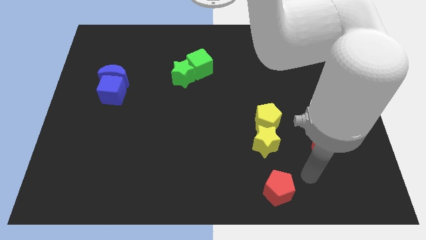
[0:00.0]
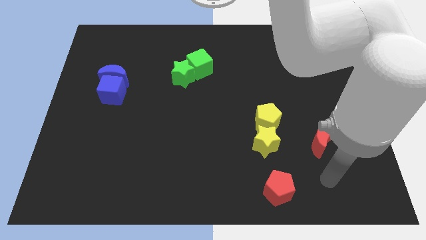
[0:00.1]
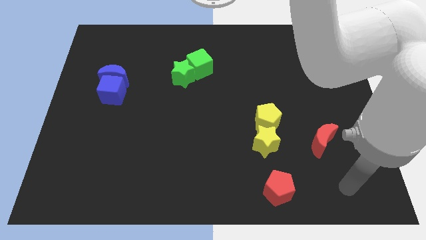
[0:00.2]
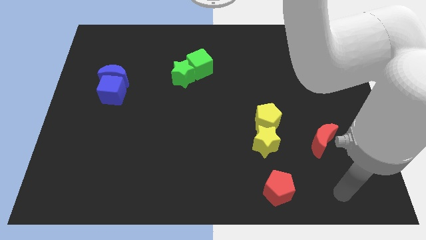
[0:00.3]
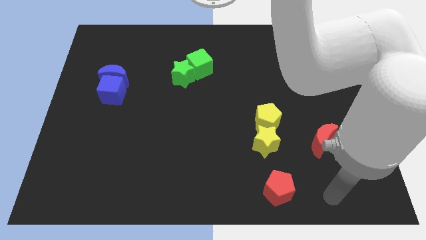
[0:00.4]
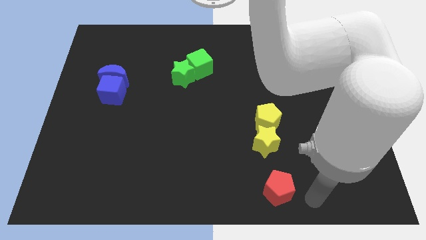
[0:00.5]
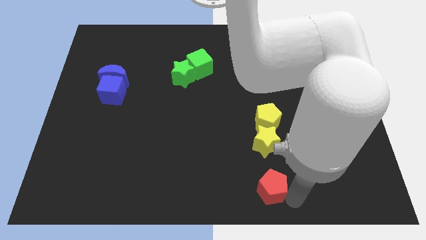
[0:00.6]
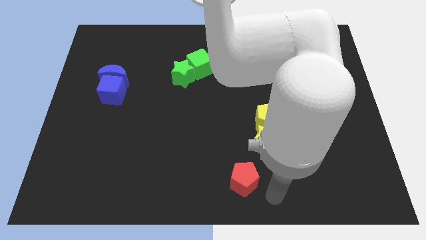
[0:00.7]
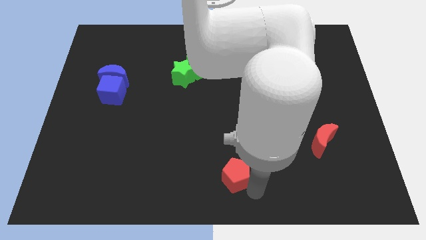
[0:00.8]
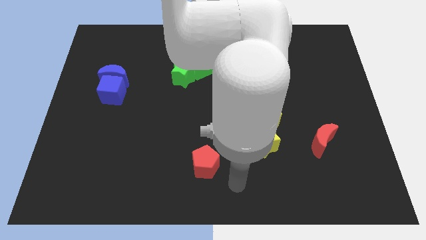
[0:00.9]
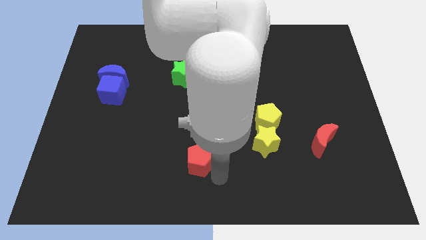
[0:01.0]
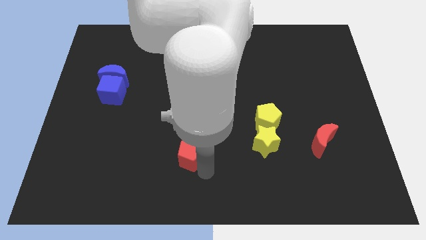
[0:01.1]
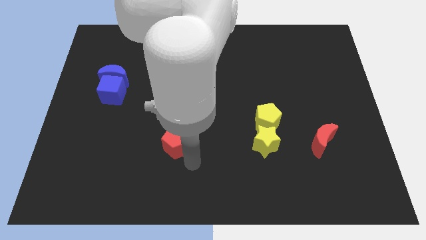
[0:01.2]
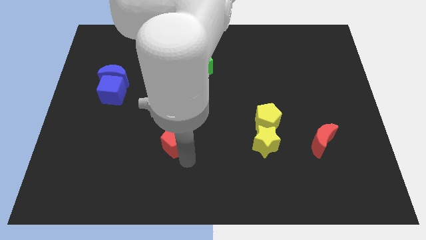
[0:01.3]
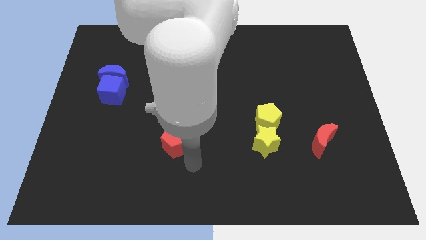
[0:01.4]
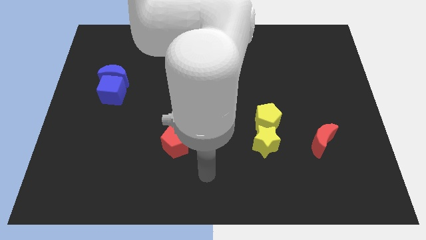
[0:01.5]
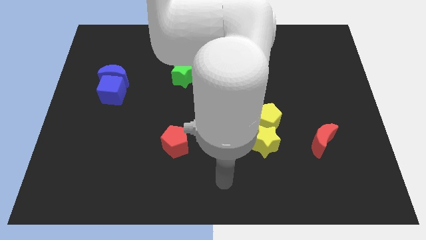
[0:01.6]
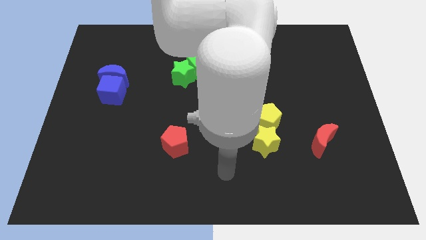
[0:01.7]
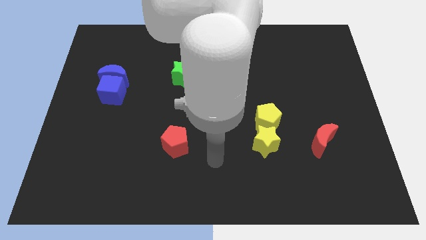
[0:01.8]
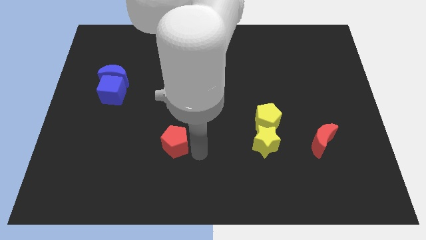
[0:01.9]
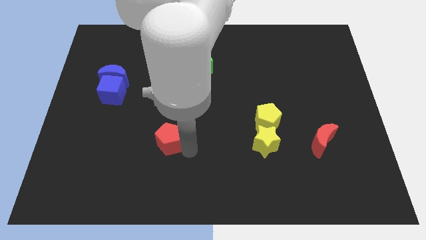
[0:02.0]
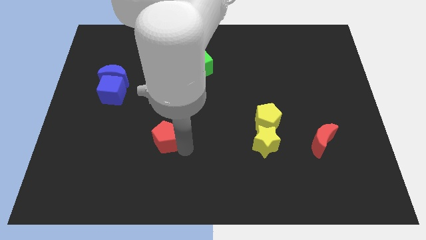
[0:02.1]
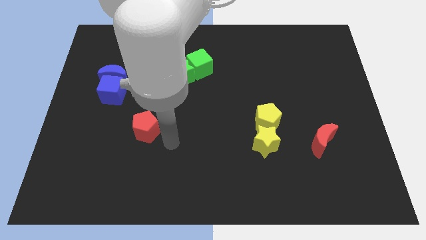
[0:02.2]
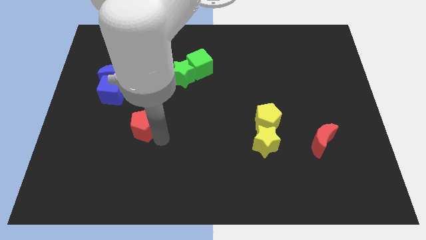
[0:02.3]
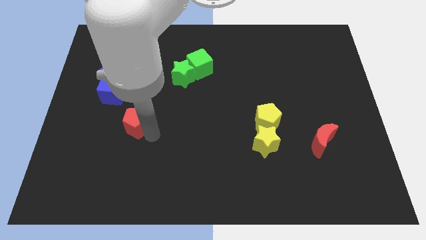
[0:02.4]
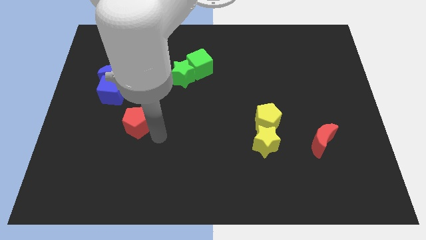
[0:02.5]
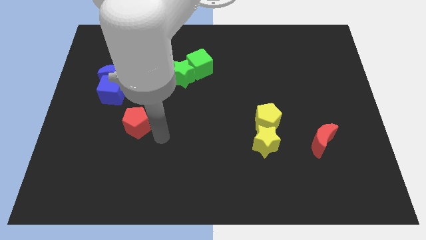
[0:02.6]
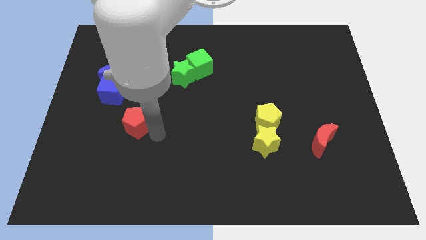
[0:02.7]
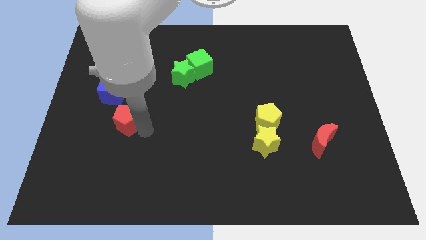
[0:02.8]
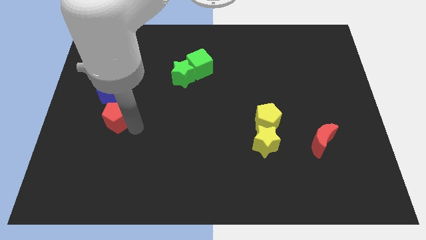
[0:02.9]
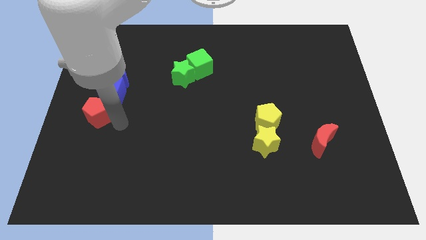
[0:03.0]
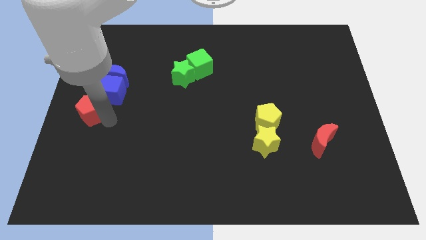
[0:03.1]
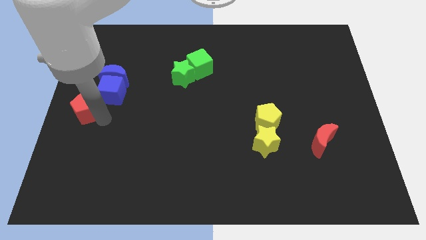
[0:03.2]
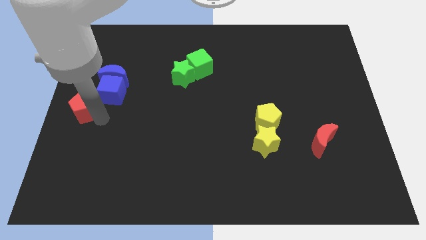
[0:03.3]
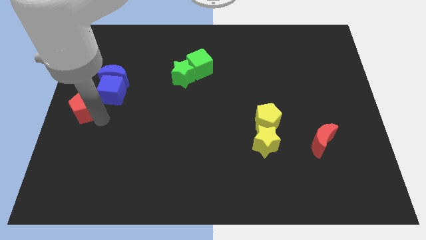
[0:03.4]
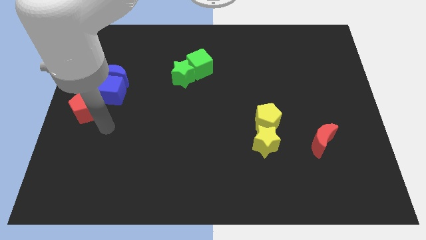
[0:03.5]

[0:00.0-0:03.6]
place the red pentagon at the center left side of the board

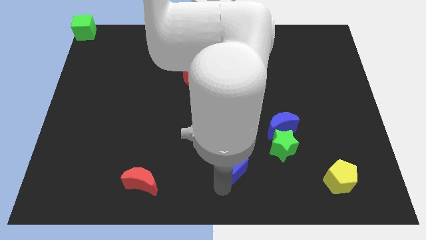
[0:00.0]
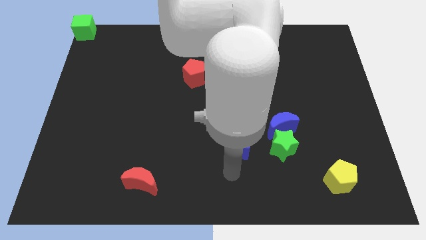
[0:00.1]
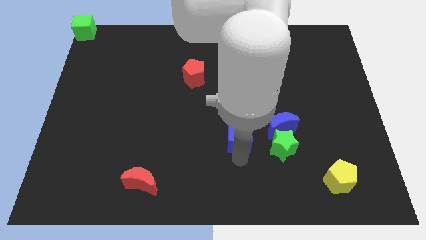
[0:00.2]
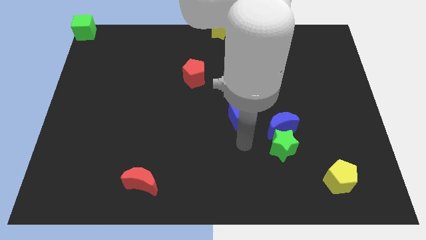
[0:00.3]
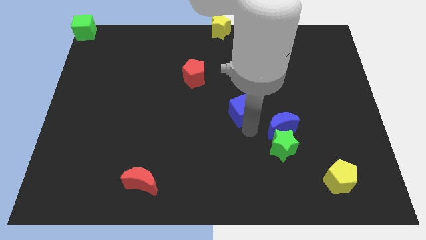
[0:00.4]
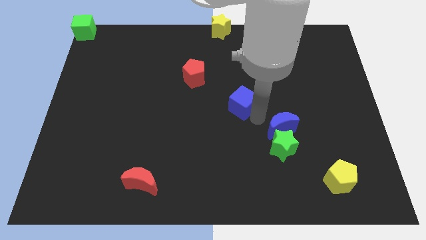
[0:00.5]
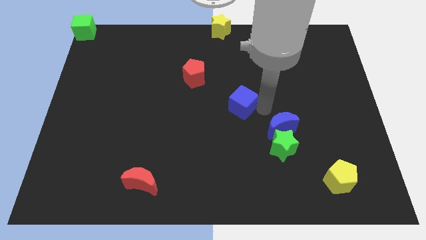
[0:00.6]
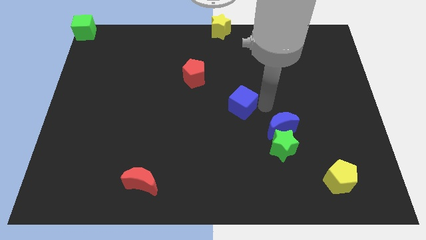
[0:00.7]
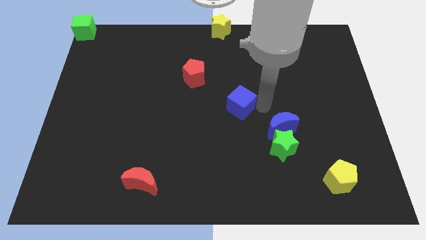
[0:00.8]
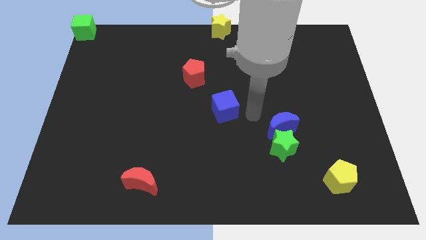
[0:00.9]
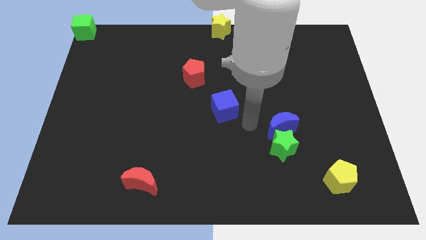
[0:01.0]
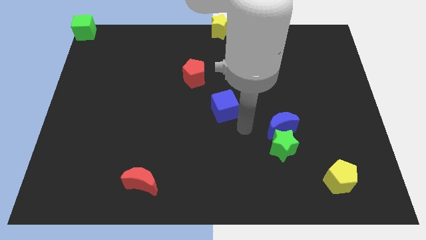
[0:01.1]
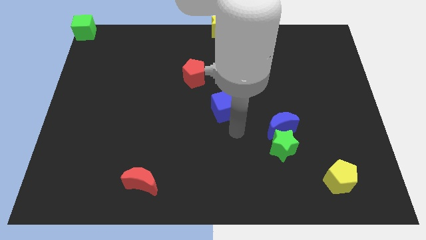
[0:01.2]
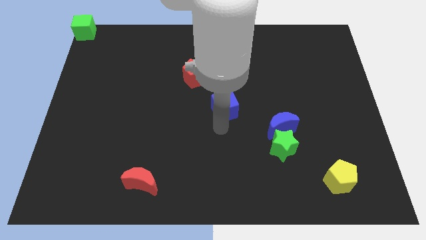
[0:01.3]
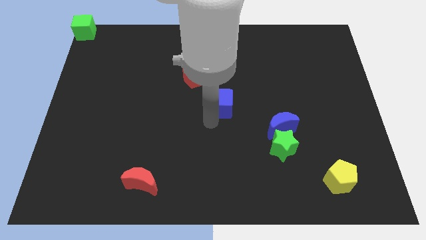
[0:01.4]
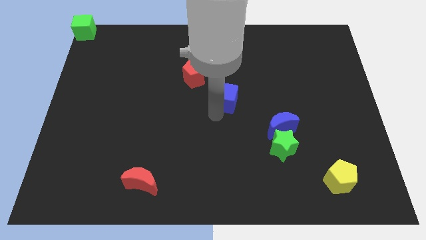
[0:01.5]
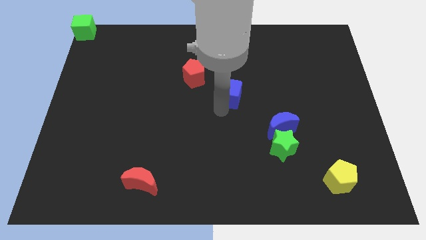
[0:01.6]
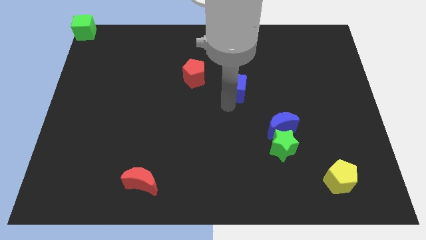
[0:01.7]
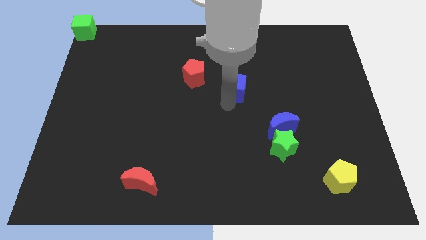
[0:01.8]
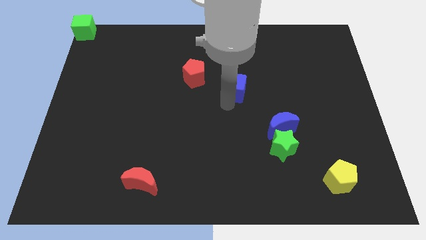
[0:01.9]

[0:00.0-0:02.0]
put the blue cube in between red pentagon and blue crescent

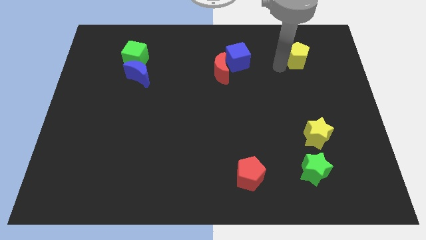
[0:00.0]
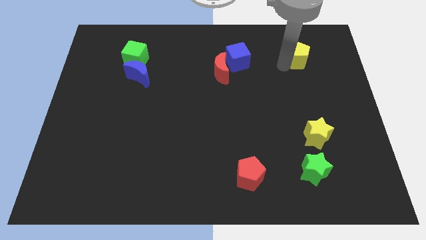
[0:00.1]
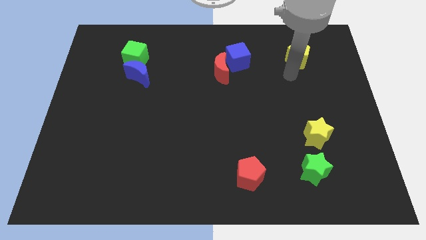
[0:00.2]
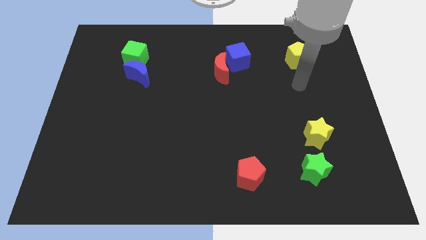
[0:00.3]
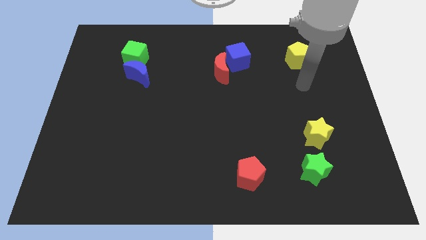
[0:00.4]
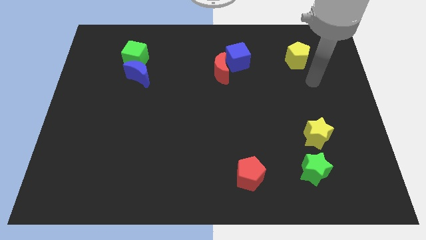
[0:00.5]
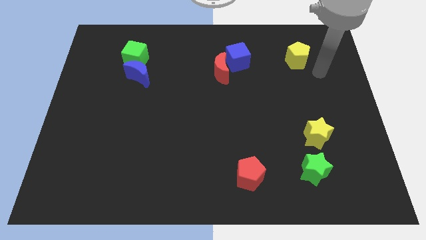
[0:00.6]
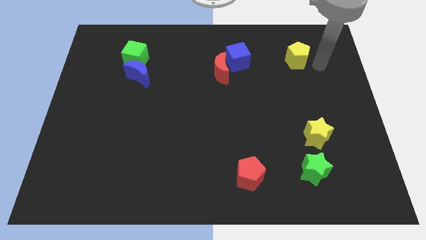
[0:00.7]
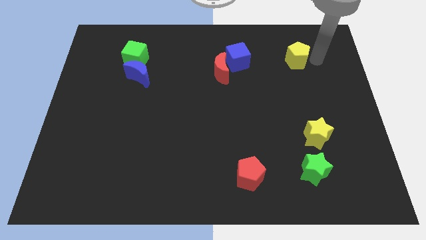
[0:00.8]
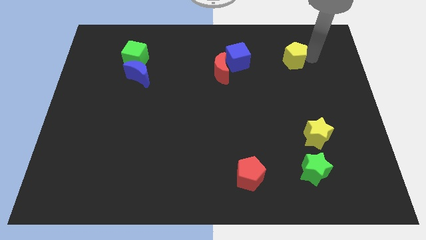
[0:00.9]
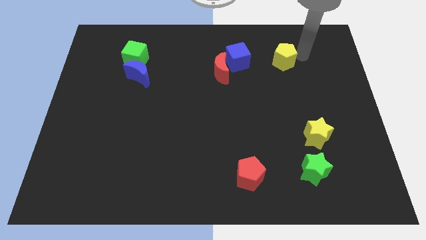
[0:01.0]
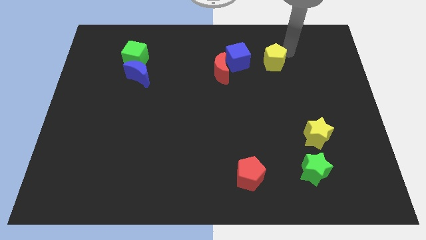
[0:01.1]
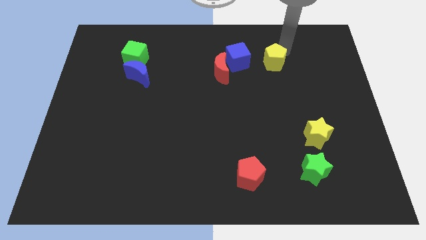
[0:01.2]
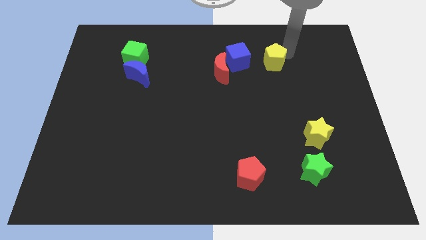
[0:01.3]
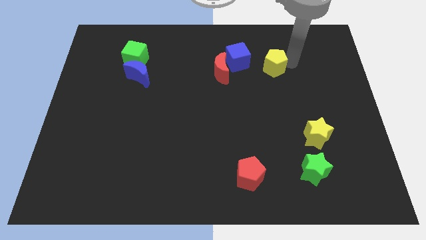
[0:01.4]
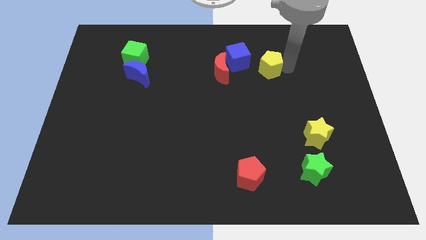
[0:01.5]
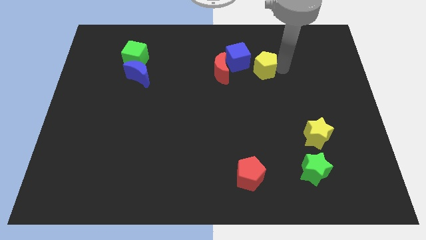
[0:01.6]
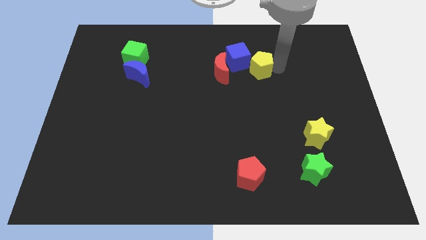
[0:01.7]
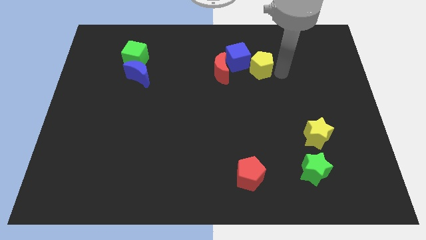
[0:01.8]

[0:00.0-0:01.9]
push the yellow pentagon towards the blue cube

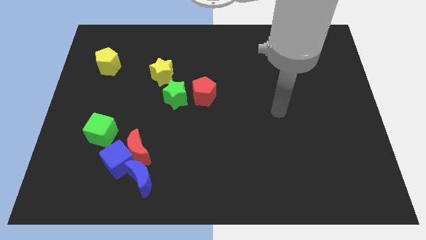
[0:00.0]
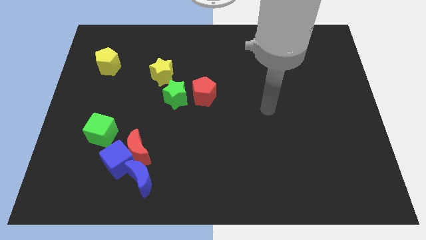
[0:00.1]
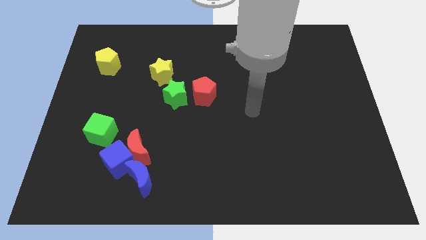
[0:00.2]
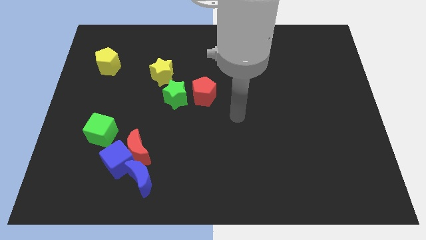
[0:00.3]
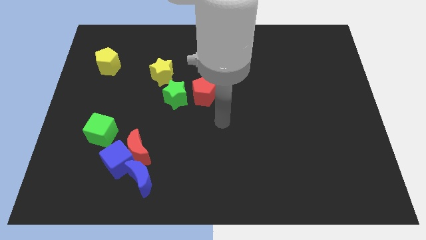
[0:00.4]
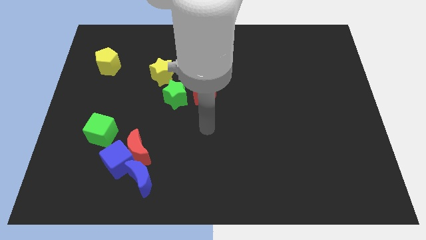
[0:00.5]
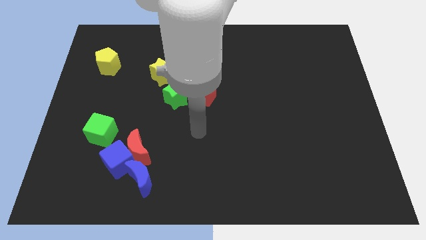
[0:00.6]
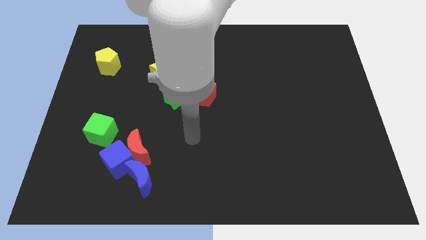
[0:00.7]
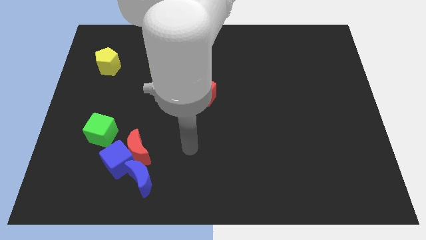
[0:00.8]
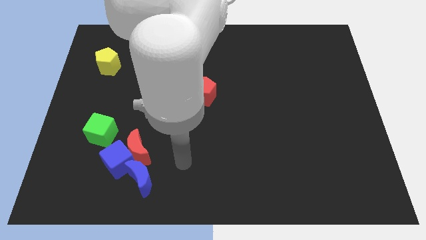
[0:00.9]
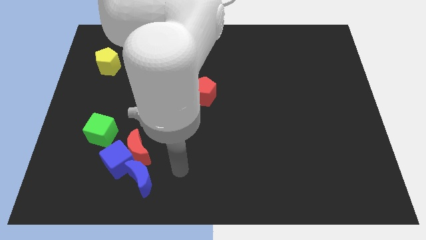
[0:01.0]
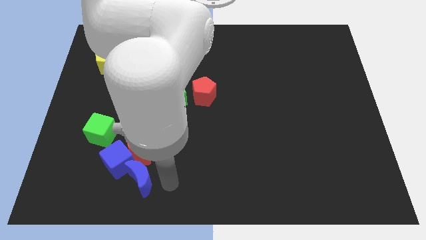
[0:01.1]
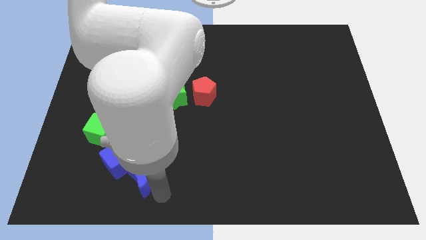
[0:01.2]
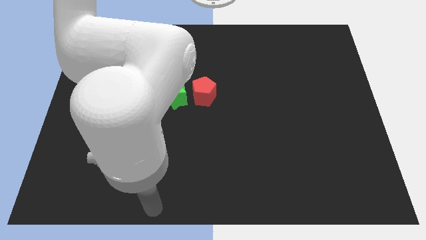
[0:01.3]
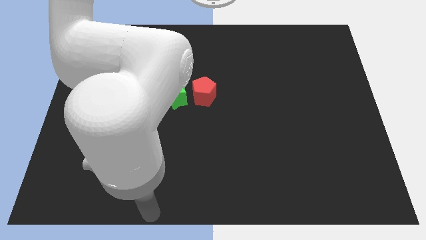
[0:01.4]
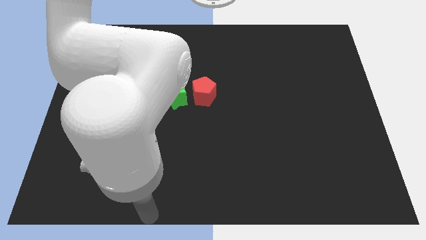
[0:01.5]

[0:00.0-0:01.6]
point below the blue moon
